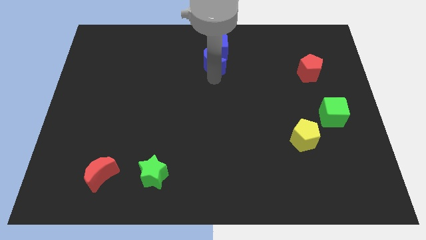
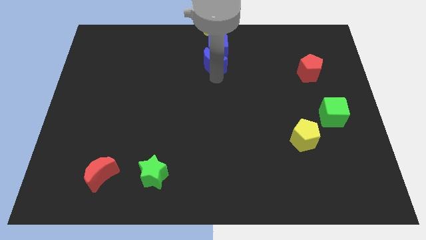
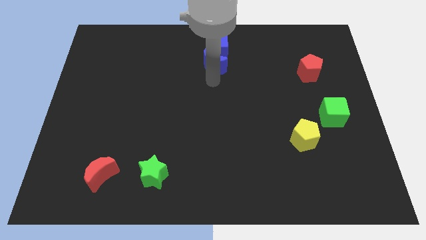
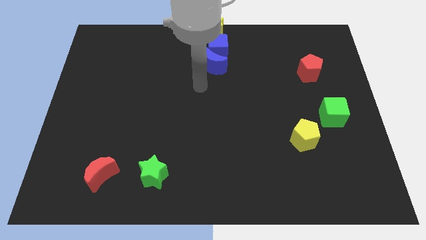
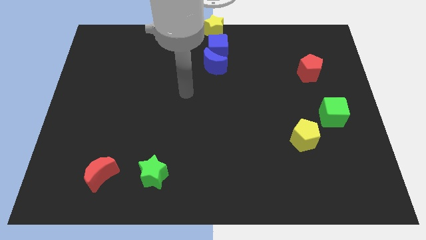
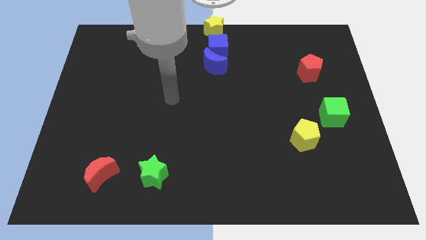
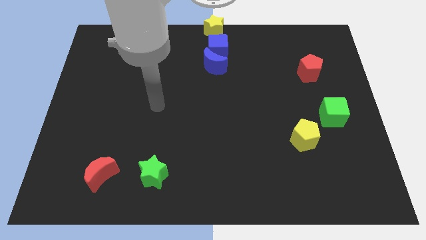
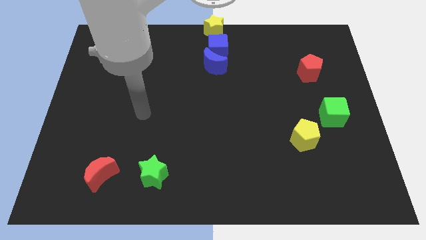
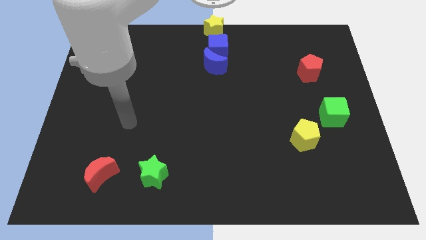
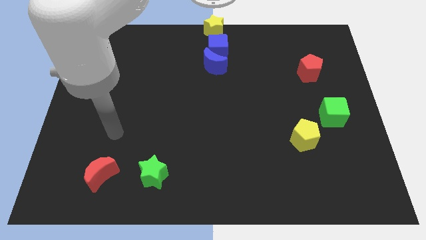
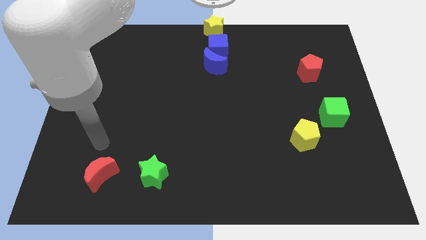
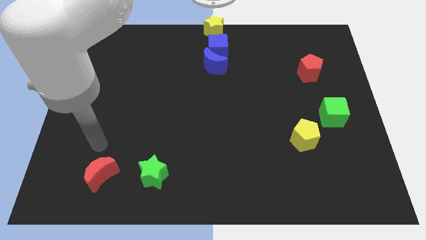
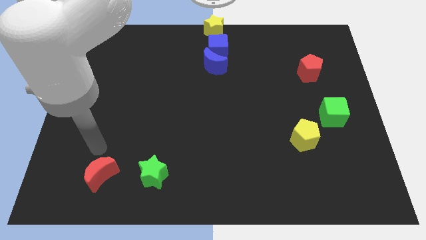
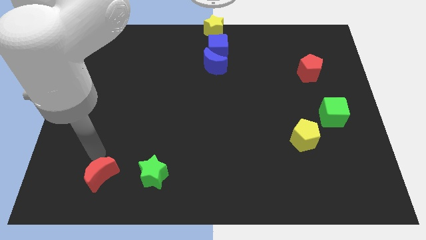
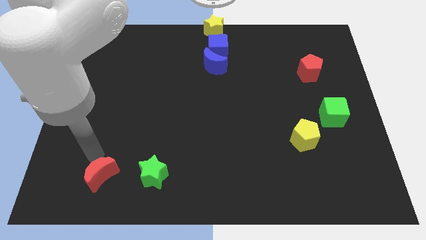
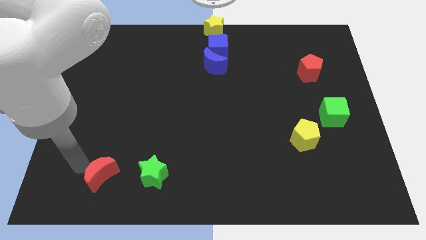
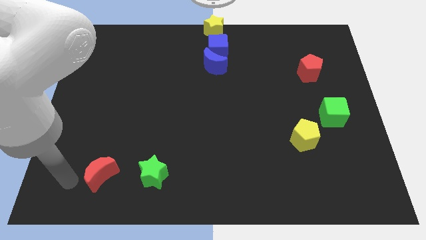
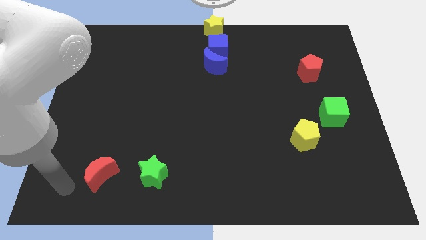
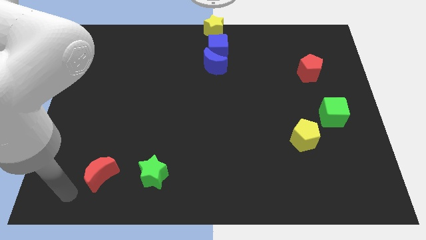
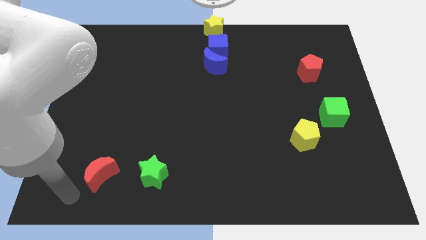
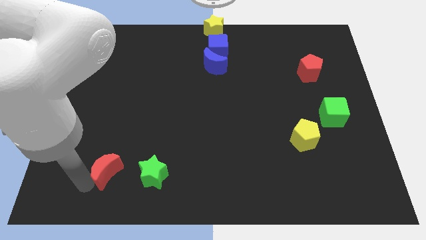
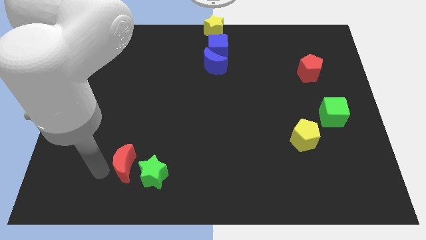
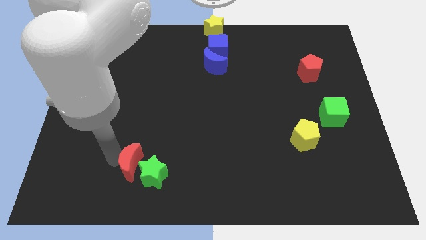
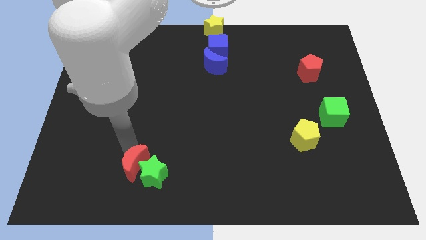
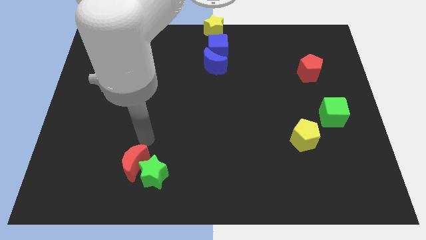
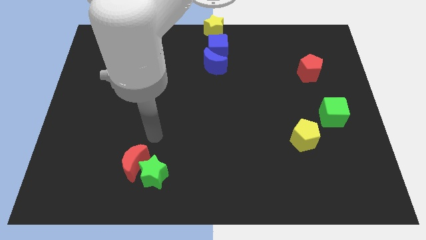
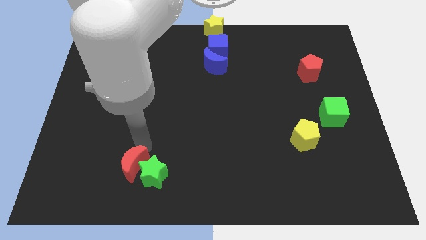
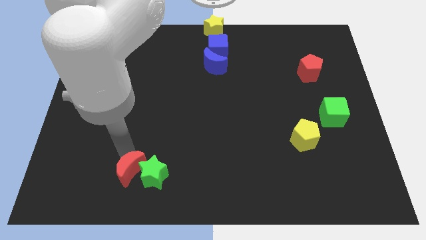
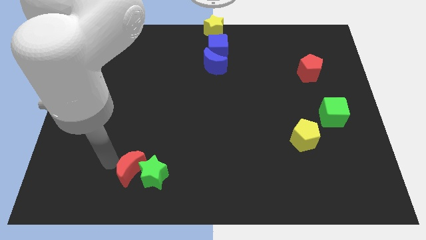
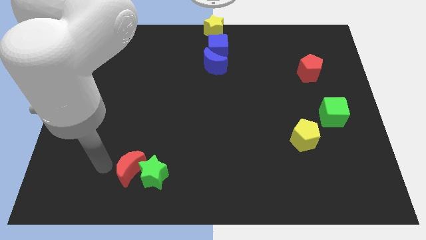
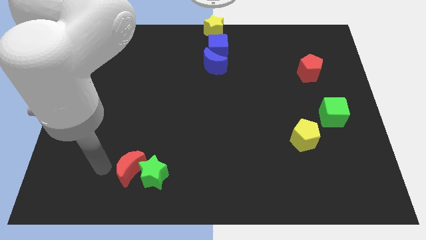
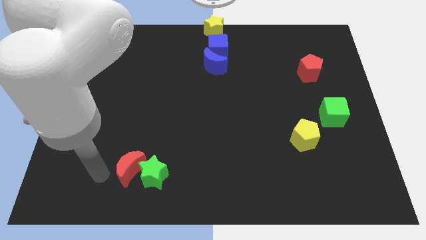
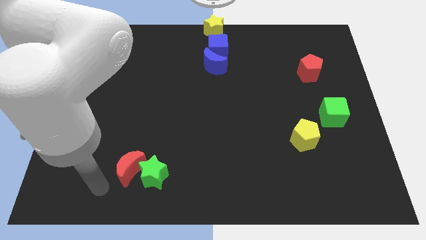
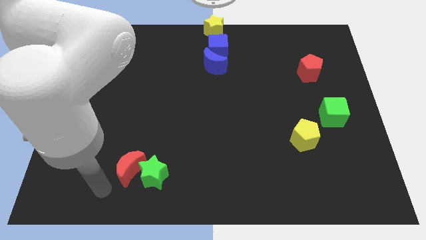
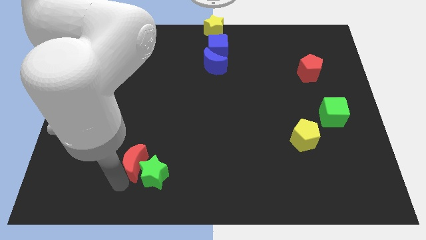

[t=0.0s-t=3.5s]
slide the red moon to the left side of the green star

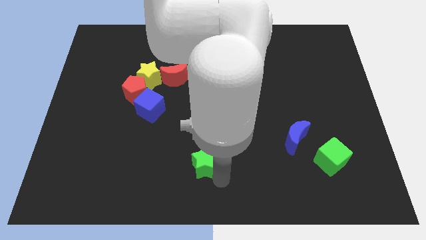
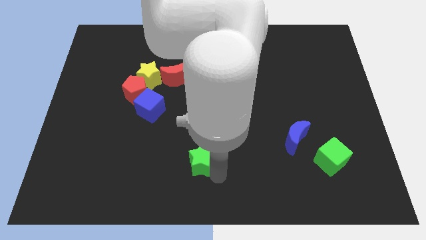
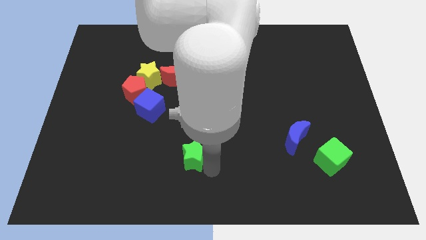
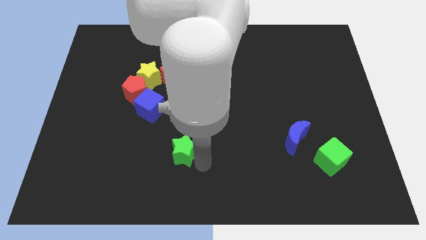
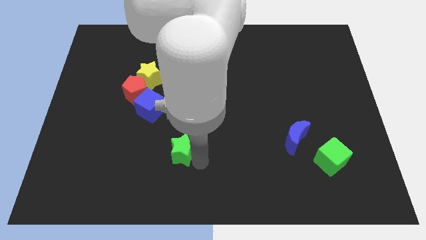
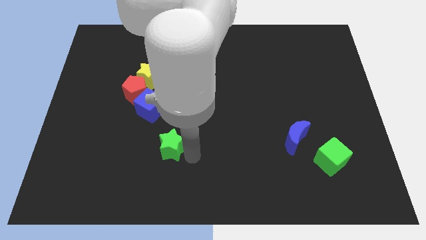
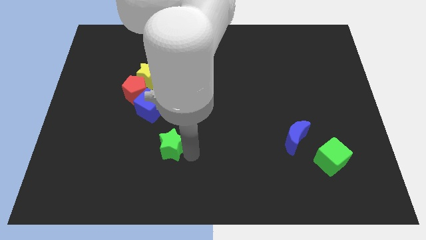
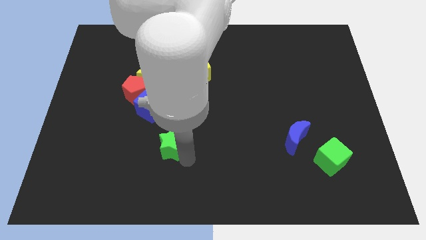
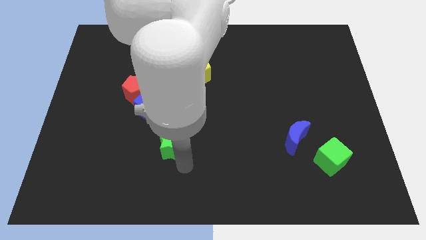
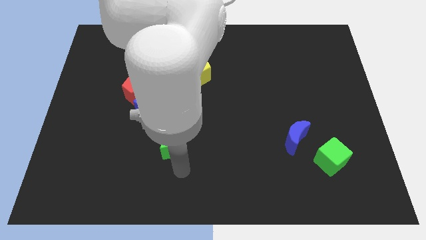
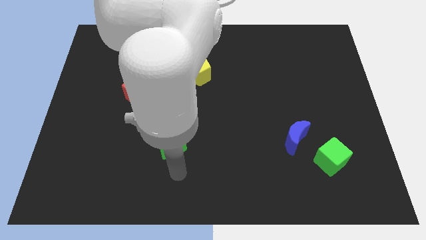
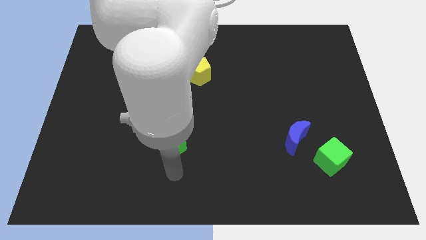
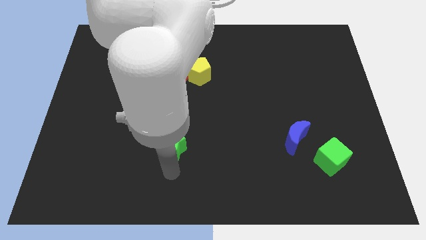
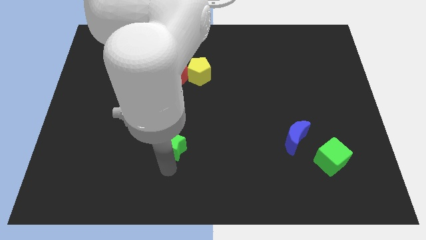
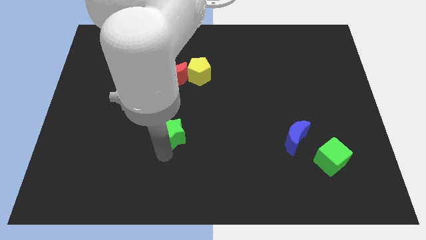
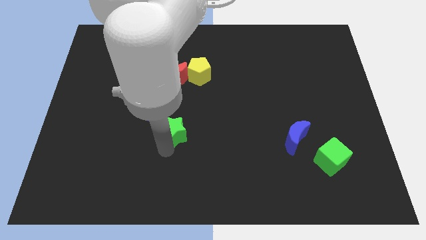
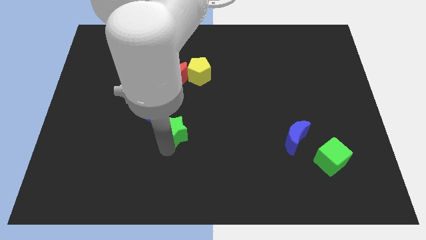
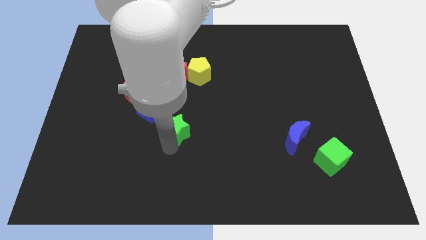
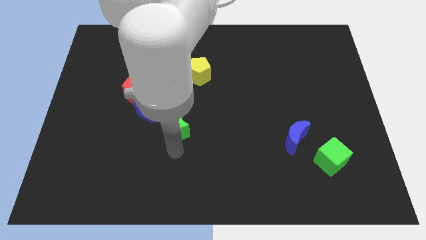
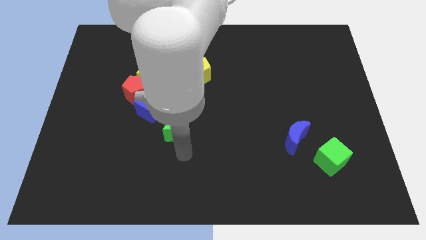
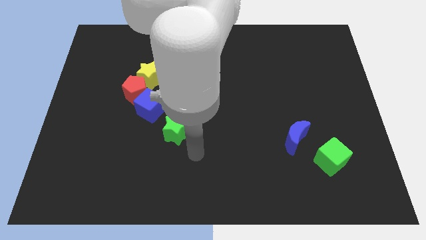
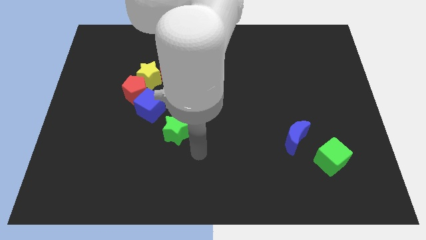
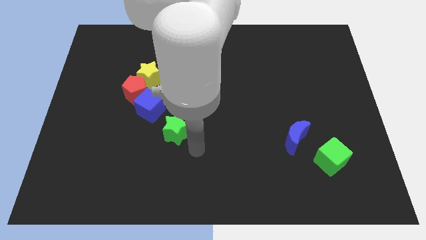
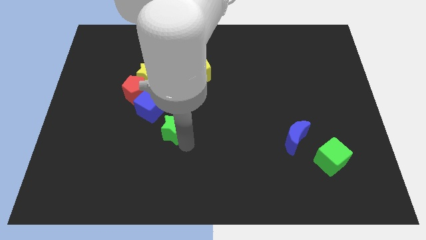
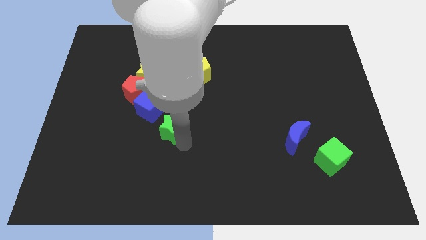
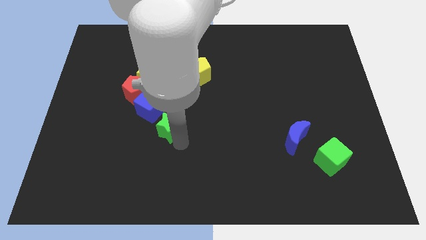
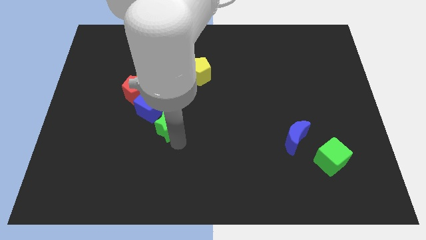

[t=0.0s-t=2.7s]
push the green star towards blue cube

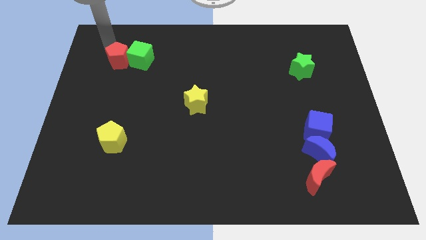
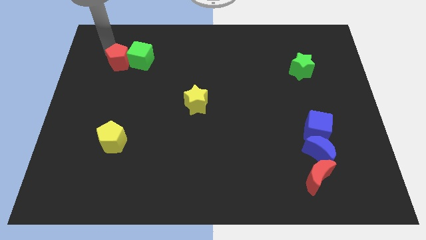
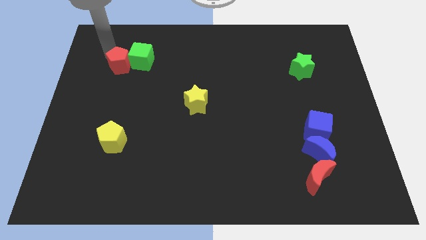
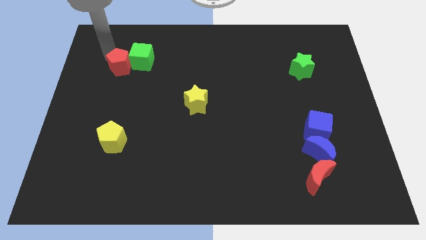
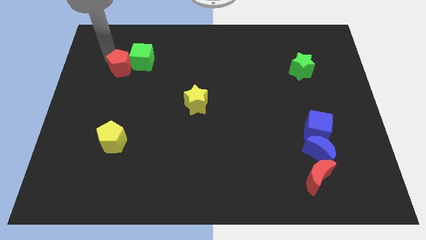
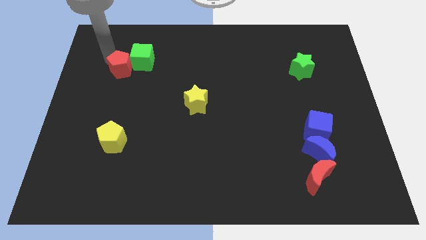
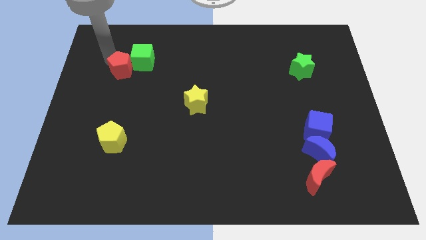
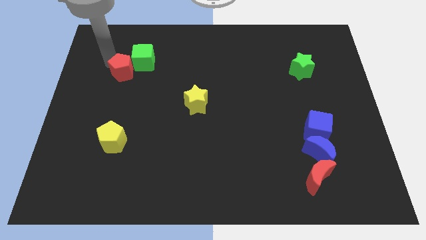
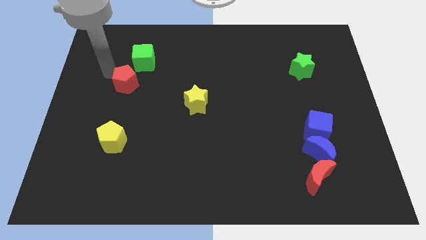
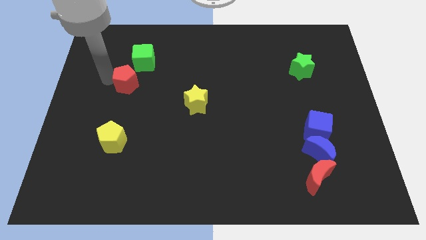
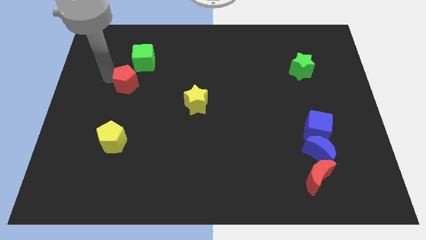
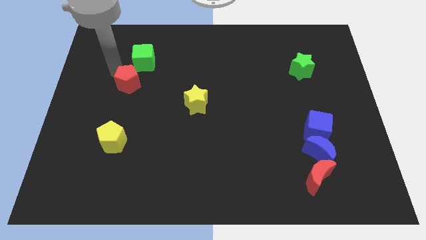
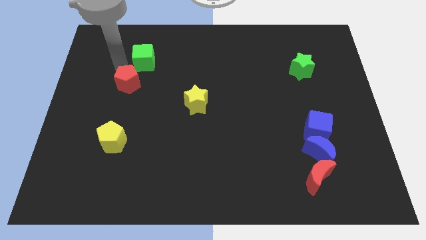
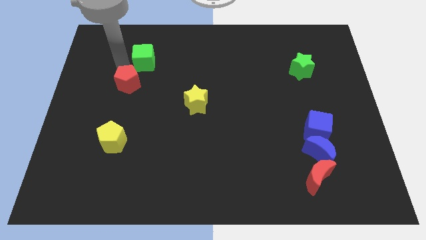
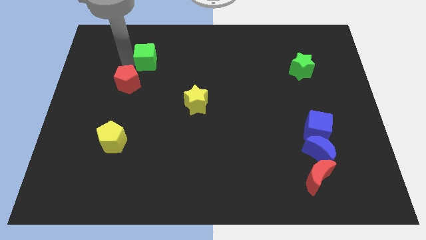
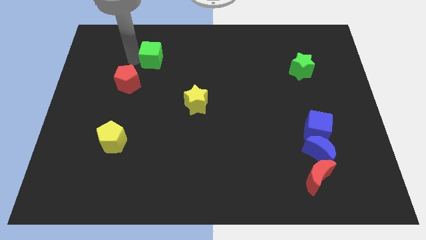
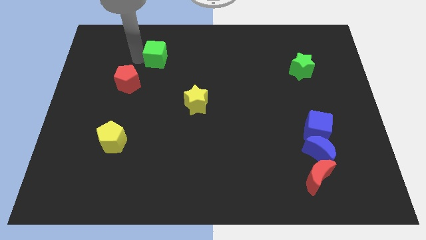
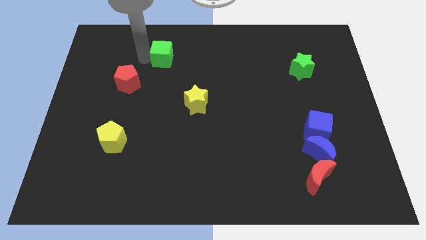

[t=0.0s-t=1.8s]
separate the green cube and red pentagon

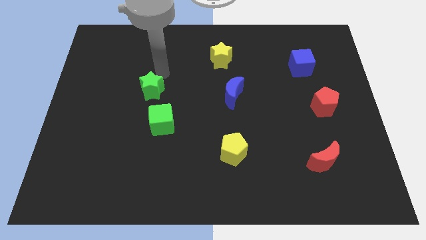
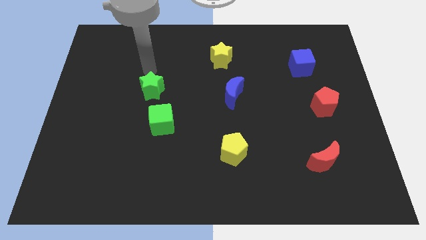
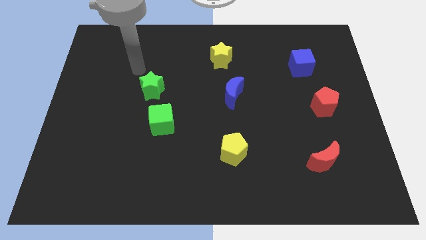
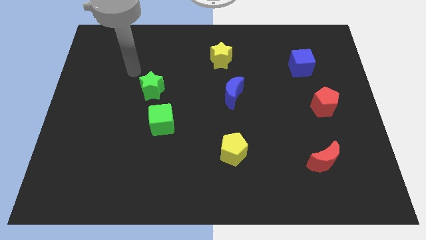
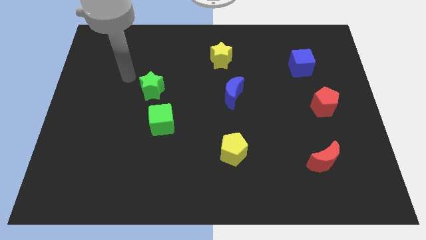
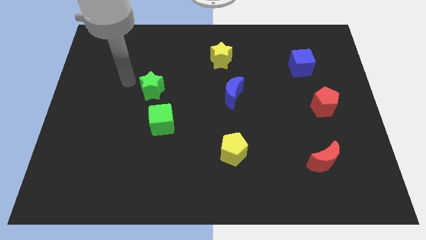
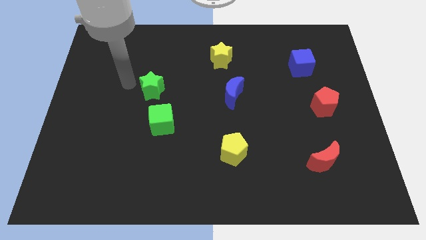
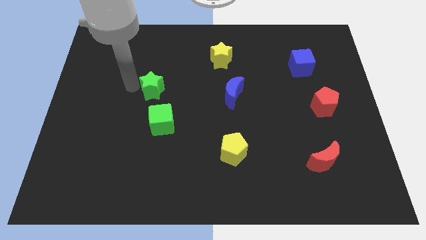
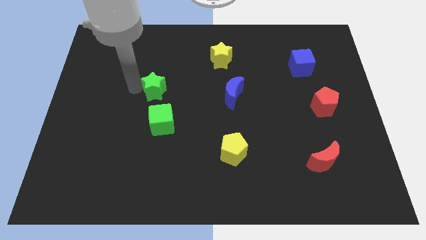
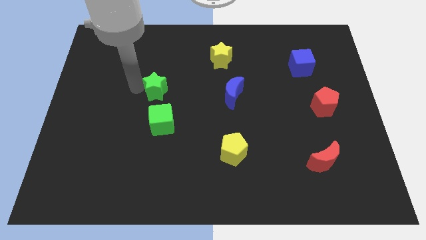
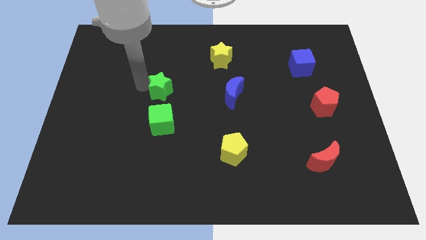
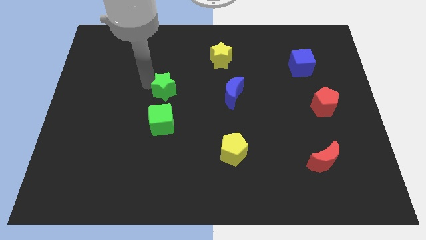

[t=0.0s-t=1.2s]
move the green star to the top of the green cube
